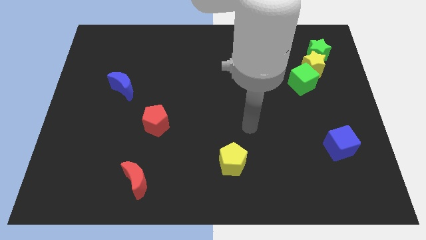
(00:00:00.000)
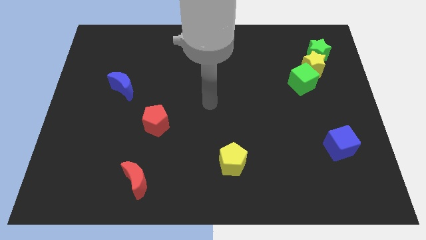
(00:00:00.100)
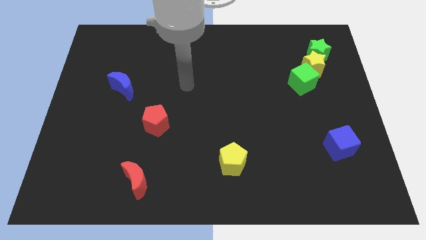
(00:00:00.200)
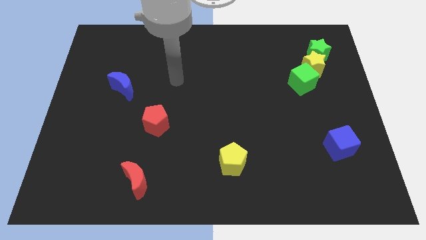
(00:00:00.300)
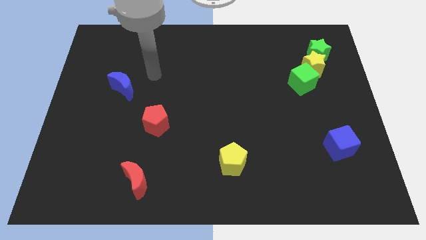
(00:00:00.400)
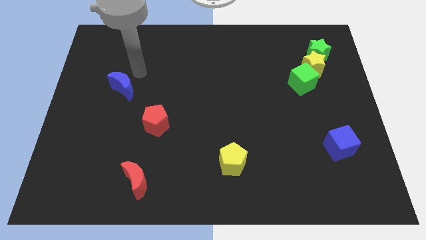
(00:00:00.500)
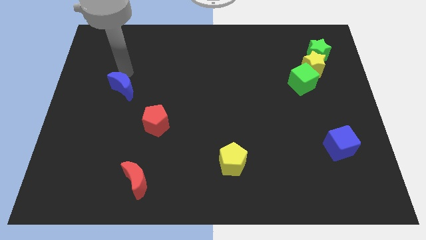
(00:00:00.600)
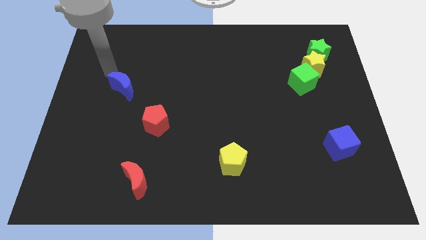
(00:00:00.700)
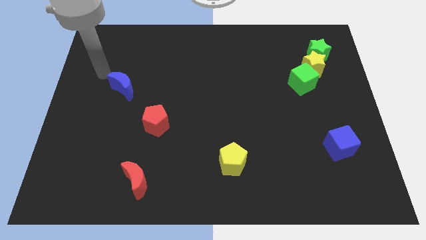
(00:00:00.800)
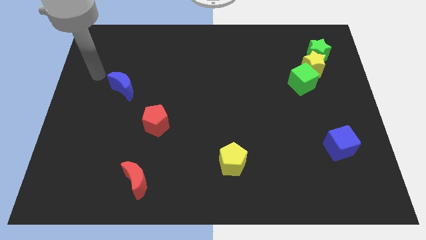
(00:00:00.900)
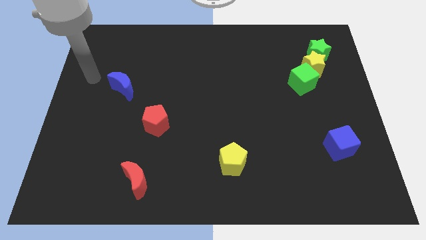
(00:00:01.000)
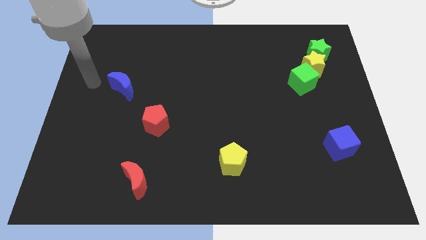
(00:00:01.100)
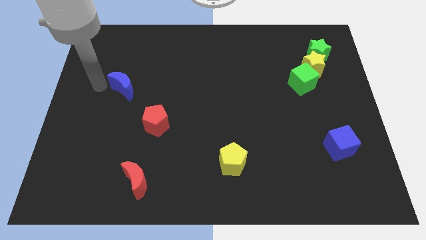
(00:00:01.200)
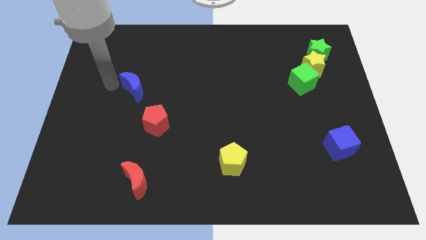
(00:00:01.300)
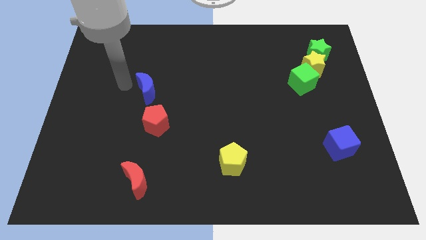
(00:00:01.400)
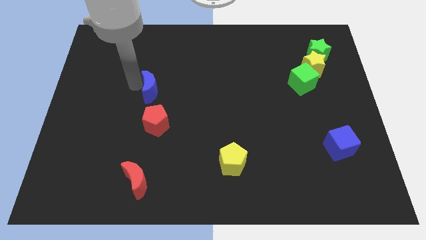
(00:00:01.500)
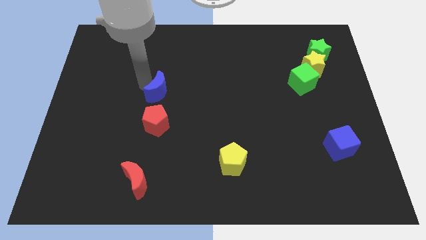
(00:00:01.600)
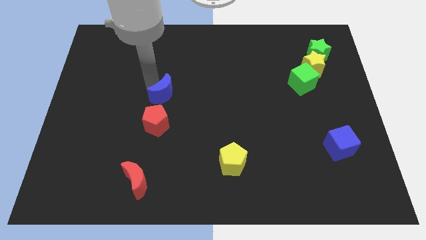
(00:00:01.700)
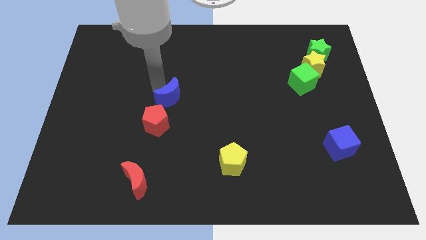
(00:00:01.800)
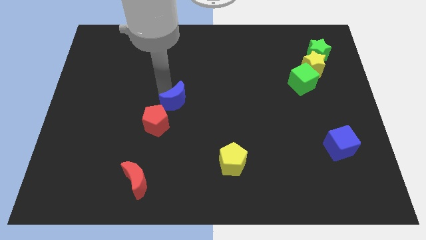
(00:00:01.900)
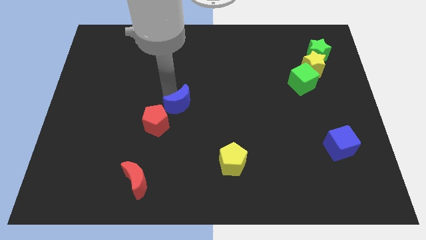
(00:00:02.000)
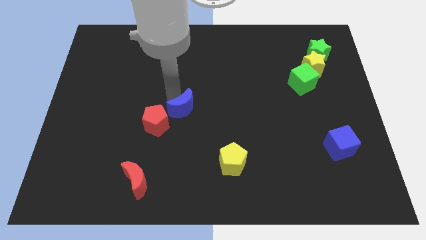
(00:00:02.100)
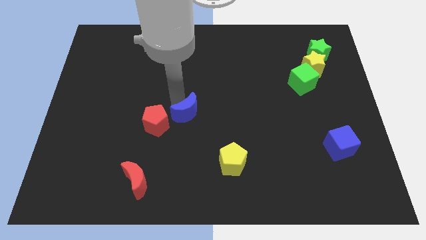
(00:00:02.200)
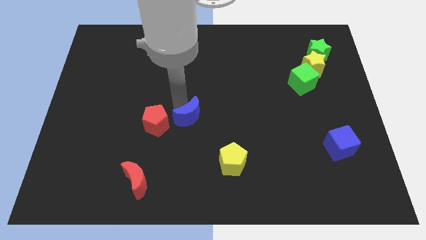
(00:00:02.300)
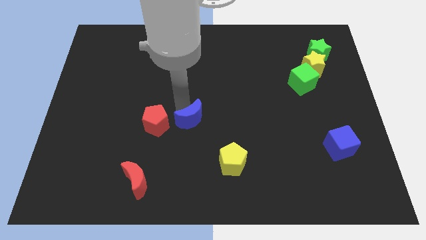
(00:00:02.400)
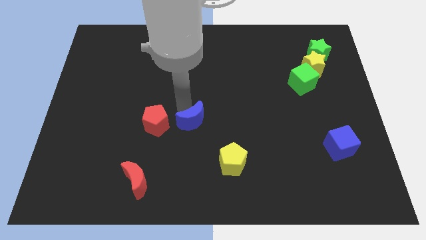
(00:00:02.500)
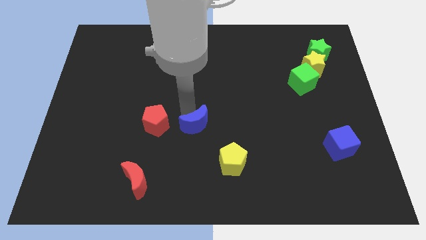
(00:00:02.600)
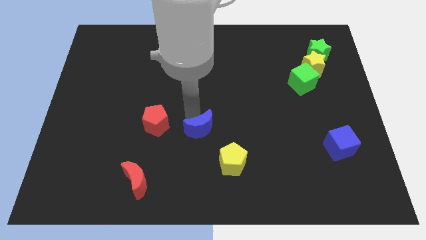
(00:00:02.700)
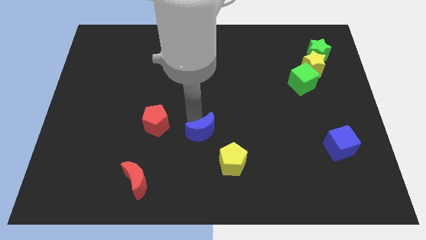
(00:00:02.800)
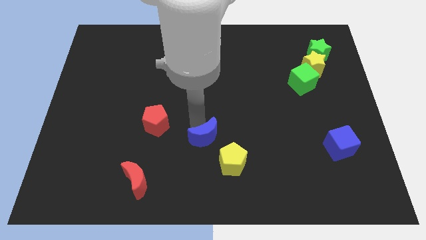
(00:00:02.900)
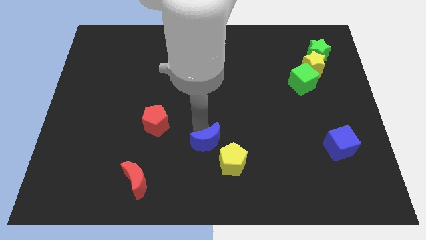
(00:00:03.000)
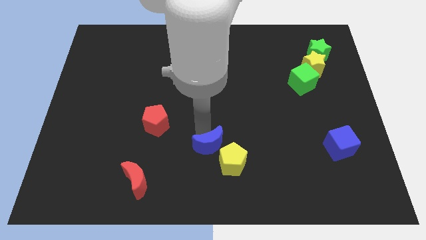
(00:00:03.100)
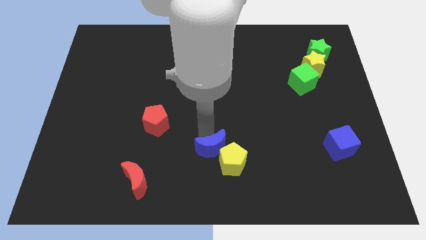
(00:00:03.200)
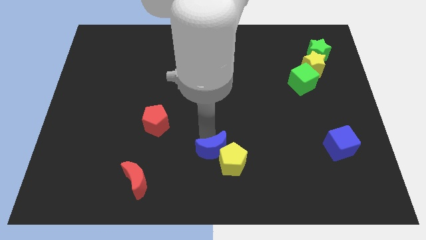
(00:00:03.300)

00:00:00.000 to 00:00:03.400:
move the blue moon towards the yellow pentagon

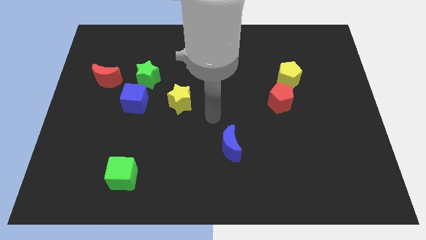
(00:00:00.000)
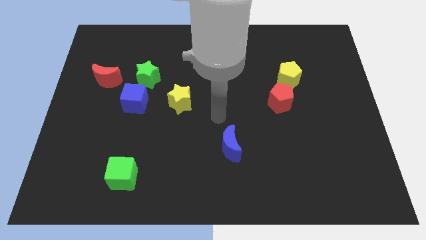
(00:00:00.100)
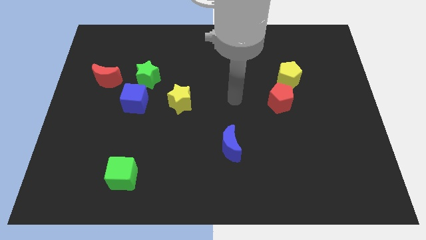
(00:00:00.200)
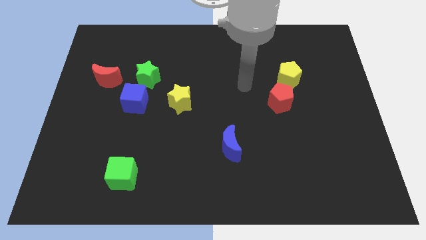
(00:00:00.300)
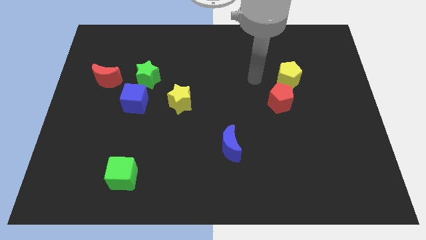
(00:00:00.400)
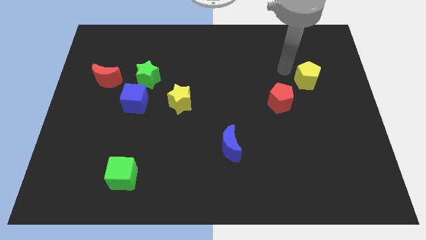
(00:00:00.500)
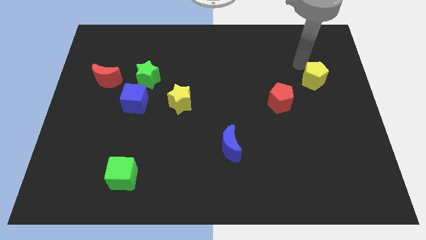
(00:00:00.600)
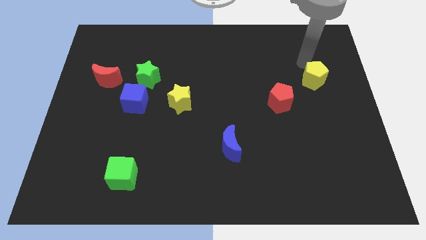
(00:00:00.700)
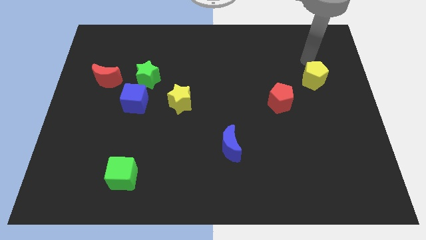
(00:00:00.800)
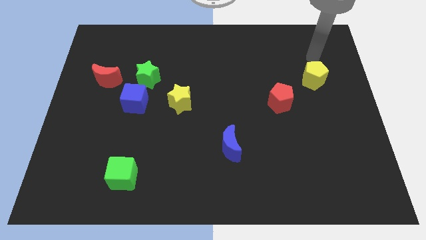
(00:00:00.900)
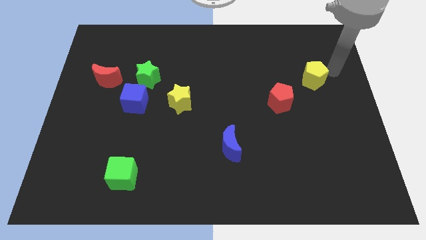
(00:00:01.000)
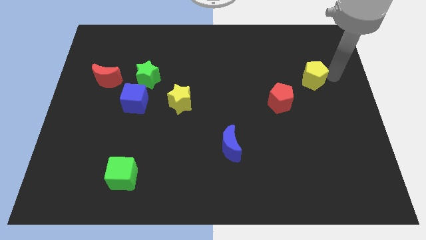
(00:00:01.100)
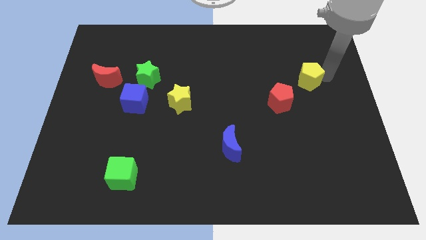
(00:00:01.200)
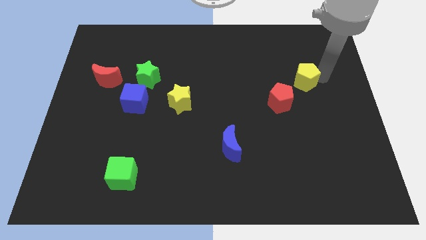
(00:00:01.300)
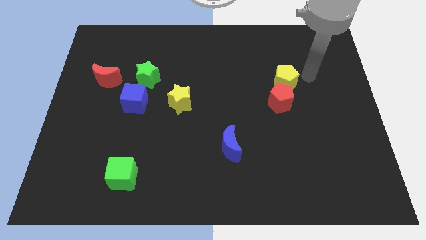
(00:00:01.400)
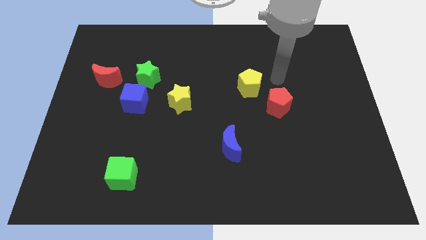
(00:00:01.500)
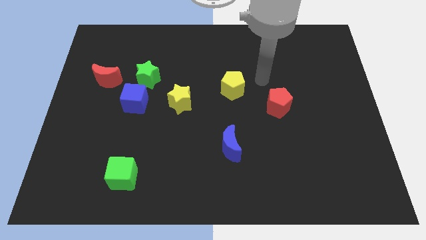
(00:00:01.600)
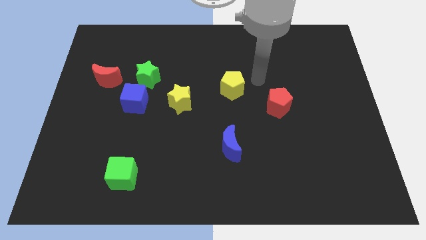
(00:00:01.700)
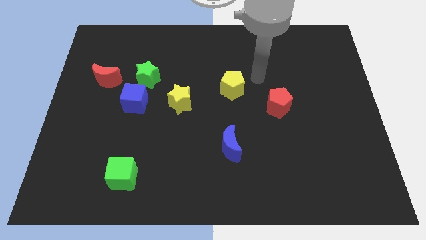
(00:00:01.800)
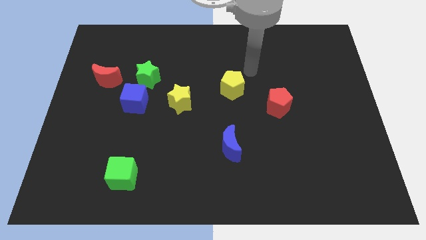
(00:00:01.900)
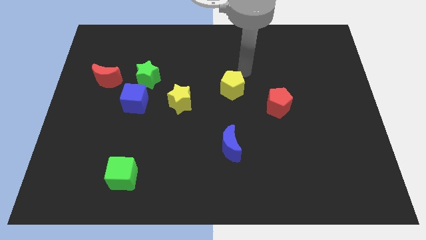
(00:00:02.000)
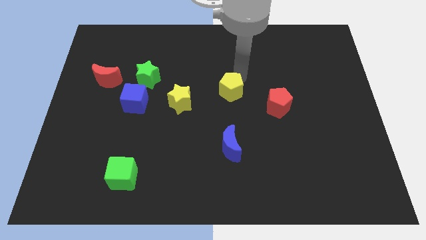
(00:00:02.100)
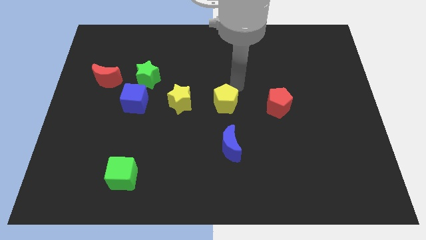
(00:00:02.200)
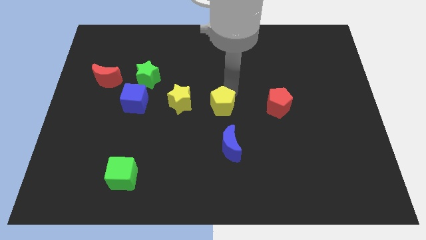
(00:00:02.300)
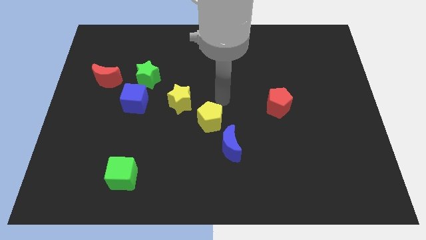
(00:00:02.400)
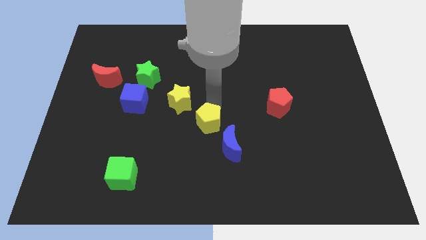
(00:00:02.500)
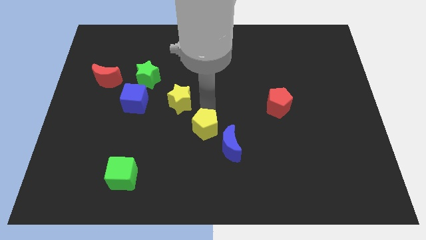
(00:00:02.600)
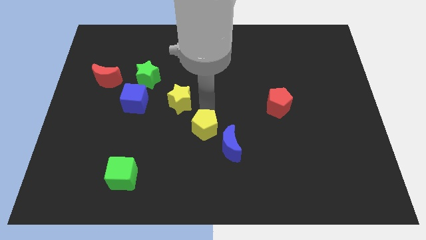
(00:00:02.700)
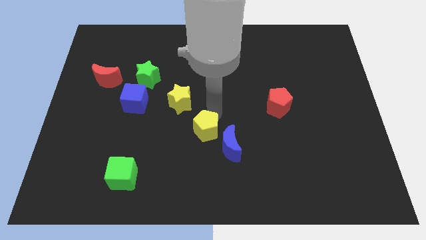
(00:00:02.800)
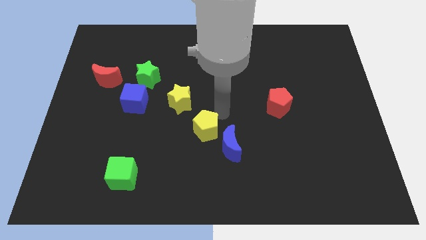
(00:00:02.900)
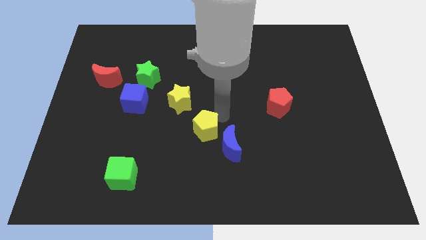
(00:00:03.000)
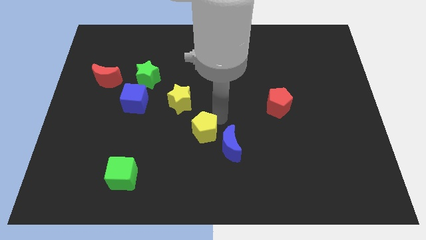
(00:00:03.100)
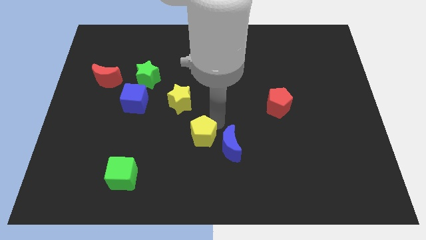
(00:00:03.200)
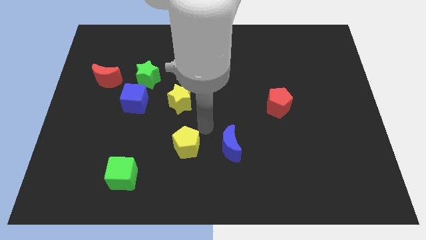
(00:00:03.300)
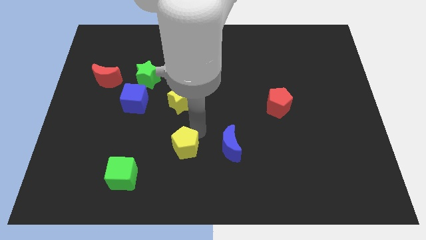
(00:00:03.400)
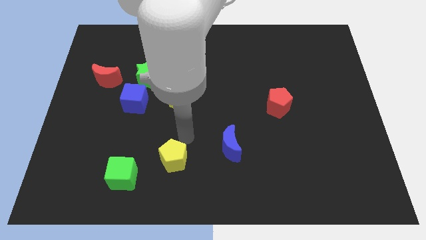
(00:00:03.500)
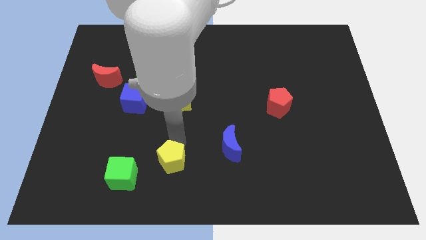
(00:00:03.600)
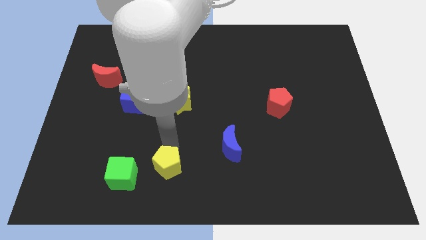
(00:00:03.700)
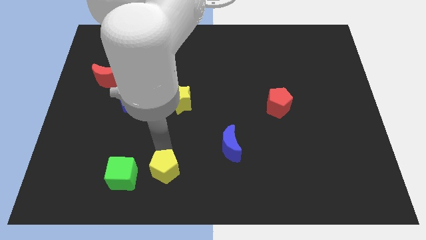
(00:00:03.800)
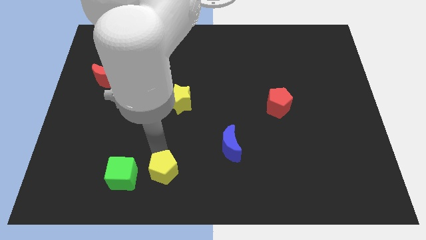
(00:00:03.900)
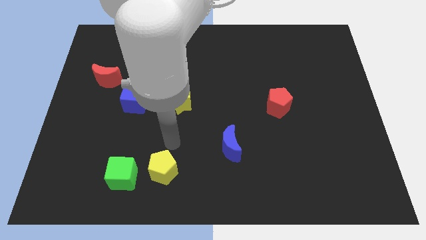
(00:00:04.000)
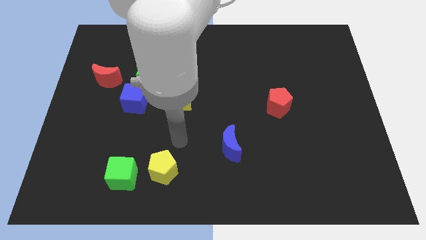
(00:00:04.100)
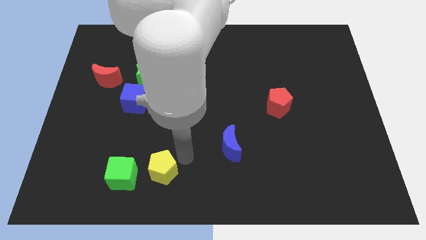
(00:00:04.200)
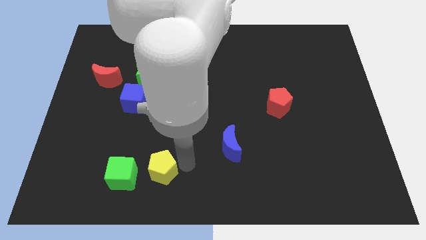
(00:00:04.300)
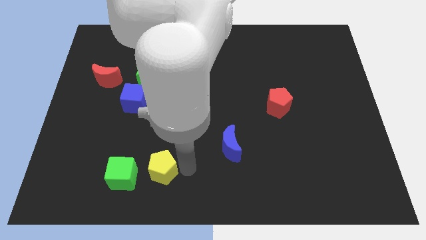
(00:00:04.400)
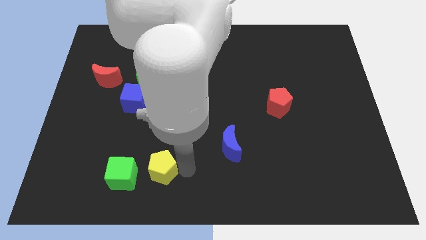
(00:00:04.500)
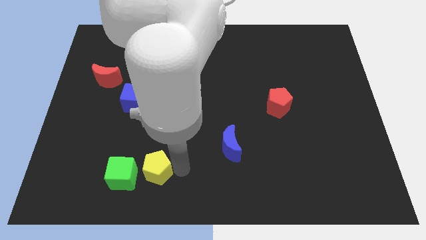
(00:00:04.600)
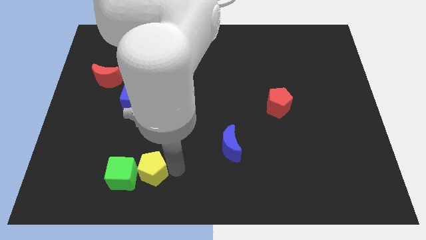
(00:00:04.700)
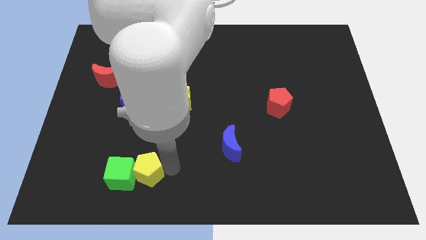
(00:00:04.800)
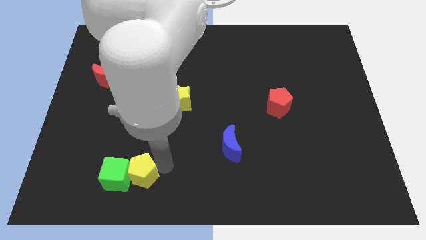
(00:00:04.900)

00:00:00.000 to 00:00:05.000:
push the yellow pentagon to the green cube
